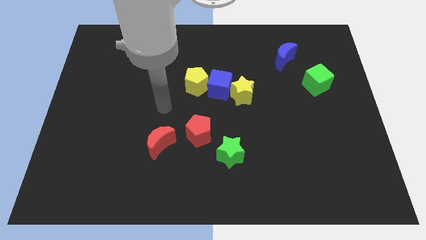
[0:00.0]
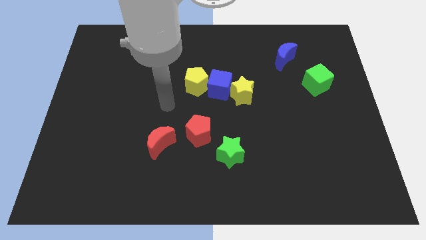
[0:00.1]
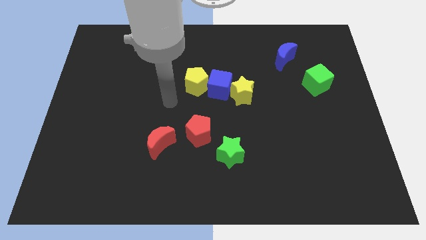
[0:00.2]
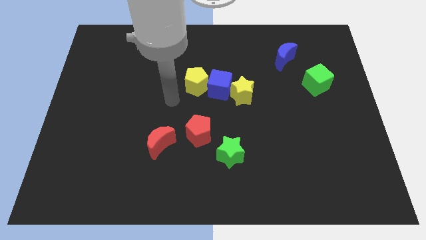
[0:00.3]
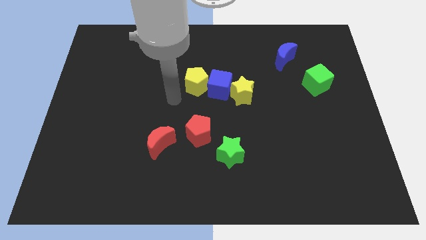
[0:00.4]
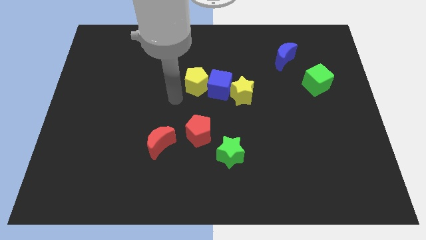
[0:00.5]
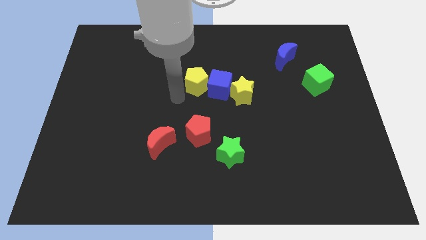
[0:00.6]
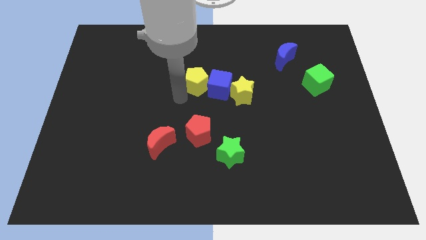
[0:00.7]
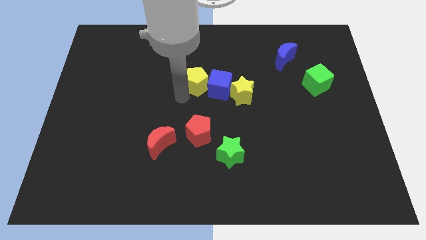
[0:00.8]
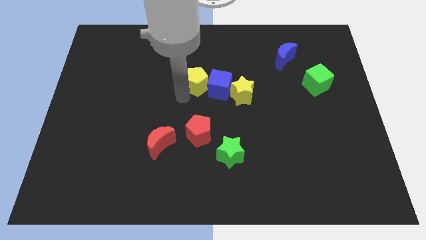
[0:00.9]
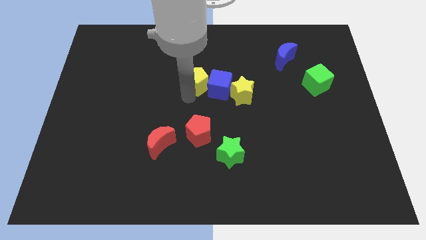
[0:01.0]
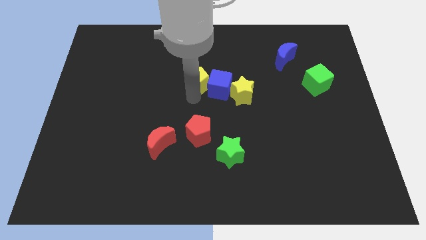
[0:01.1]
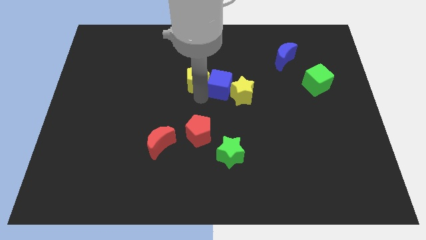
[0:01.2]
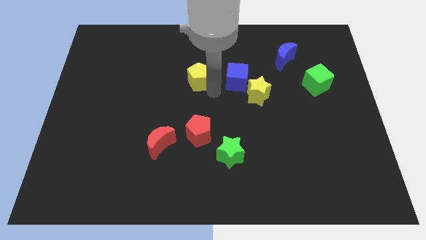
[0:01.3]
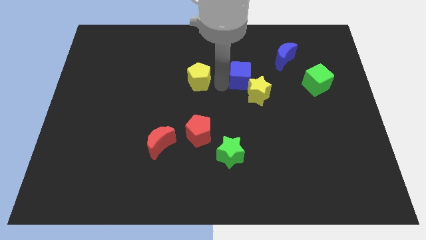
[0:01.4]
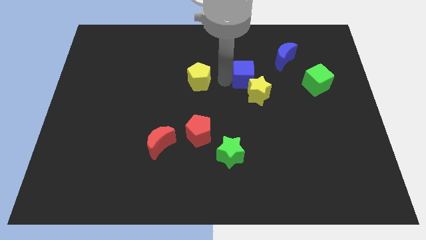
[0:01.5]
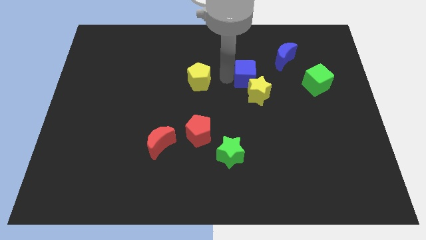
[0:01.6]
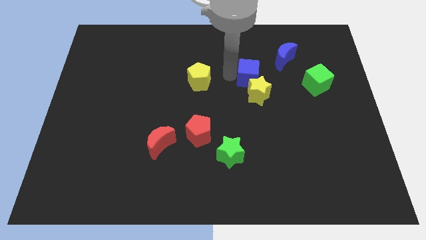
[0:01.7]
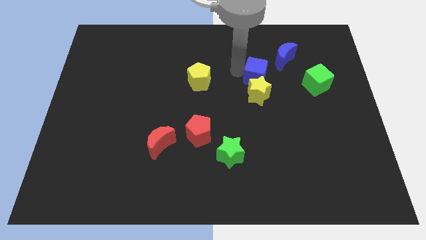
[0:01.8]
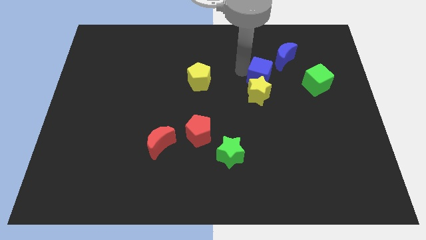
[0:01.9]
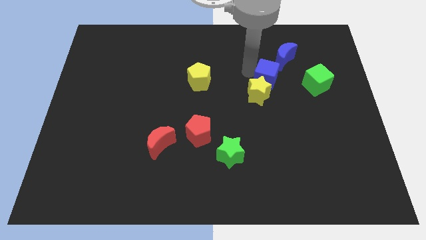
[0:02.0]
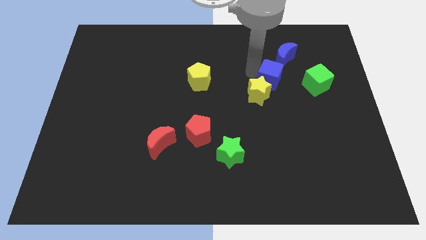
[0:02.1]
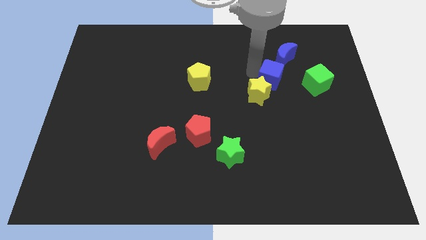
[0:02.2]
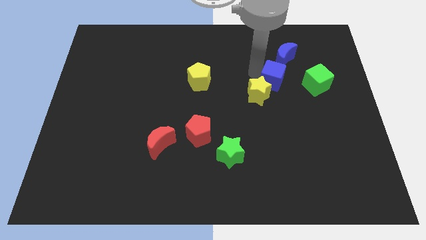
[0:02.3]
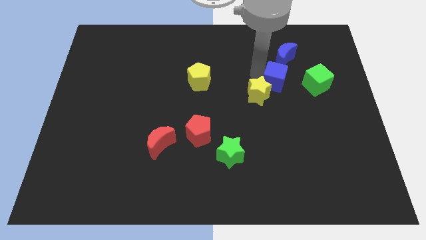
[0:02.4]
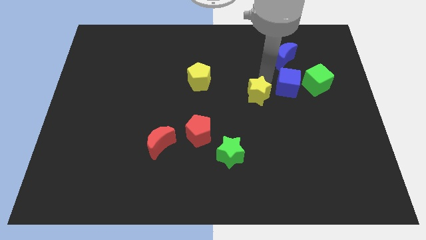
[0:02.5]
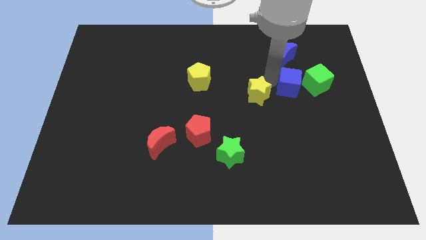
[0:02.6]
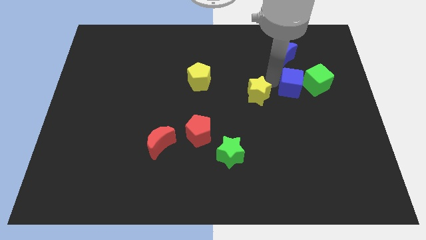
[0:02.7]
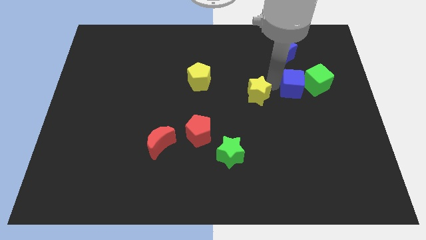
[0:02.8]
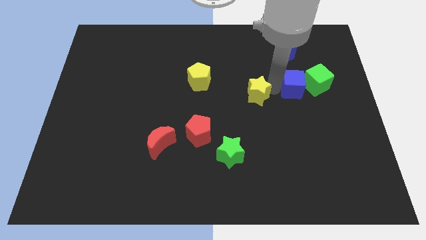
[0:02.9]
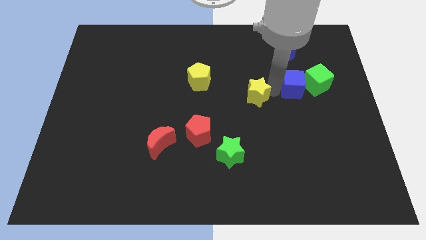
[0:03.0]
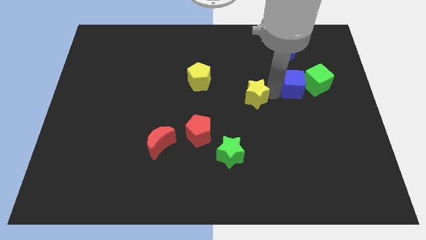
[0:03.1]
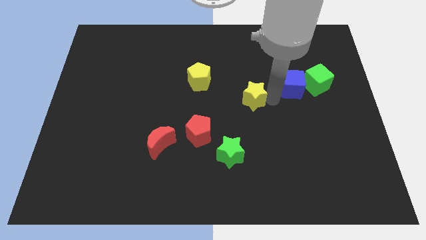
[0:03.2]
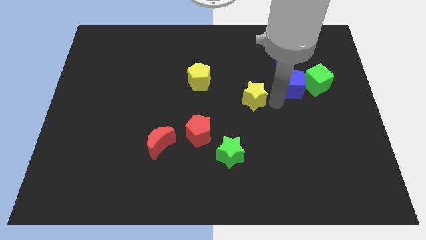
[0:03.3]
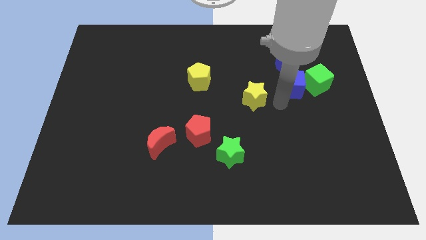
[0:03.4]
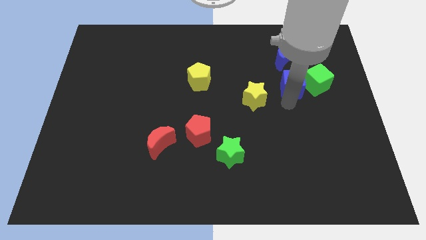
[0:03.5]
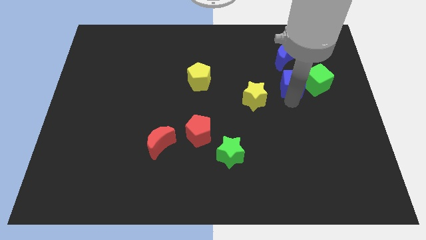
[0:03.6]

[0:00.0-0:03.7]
move the blue cube to the bottom left side of the green cube

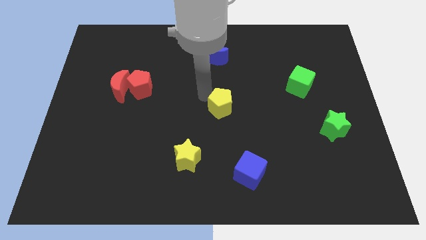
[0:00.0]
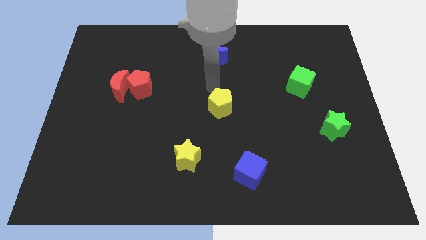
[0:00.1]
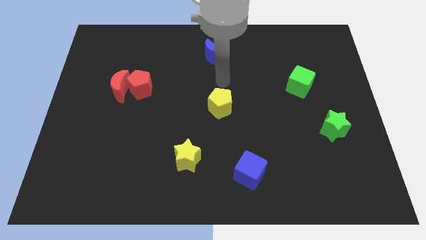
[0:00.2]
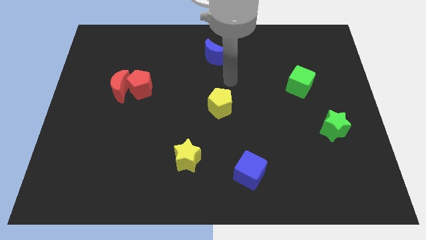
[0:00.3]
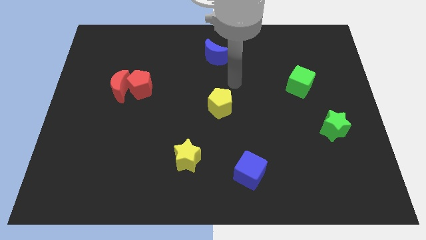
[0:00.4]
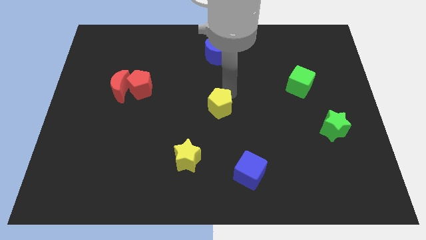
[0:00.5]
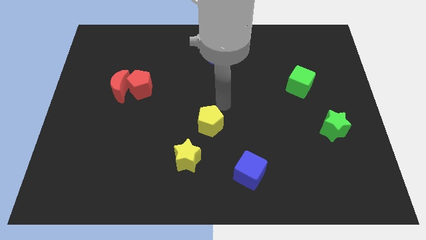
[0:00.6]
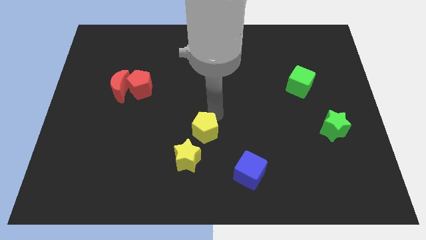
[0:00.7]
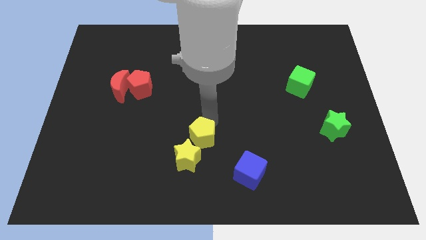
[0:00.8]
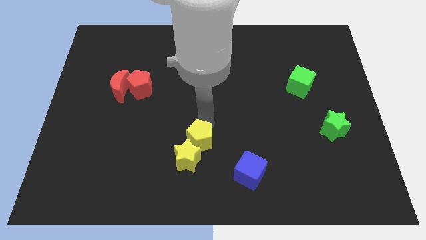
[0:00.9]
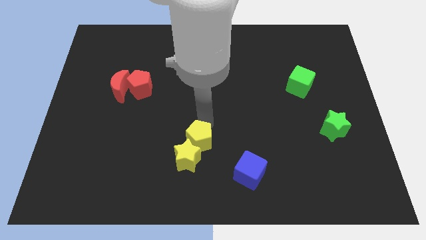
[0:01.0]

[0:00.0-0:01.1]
push the yellow pentagon towards the top right side of the yellow star

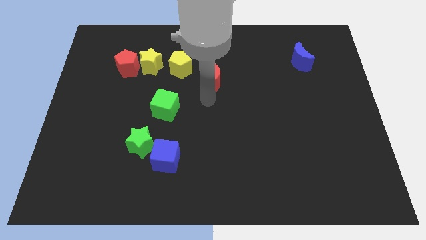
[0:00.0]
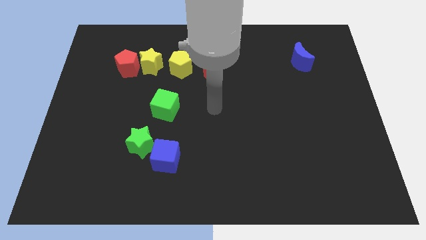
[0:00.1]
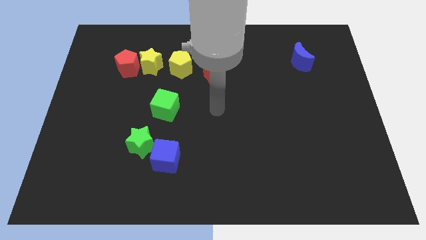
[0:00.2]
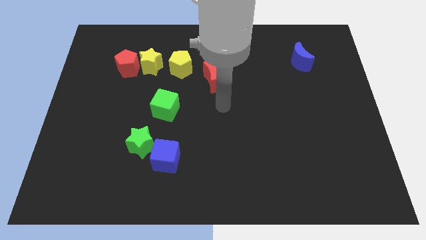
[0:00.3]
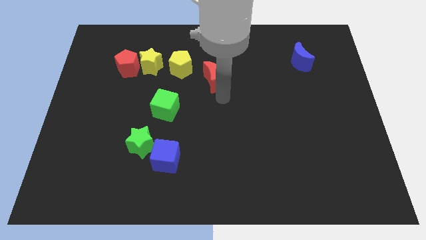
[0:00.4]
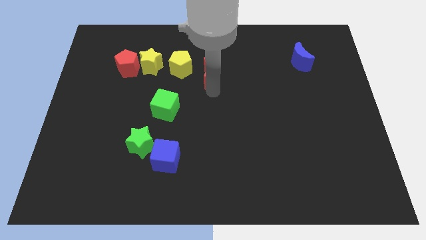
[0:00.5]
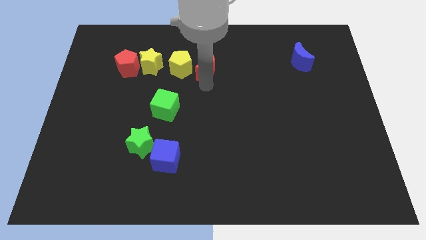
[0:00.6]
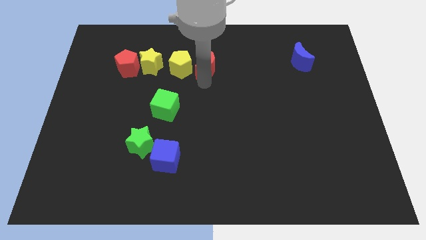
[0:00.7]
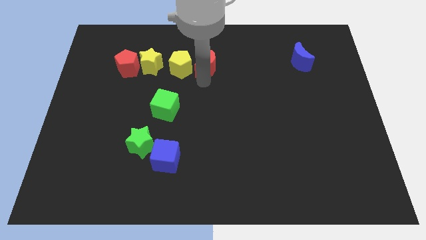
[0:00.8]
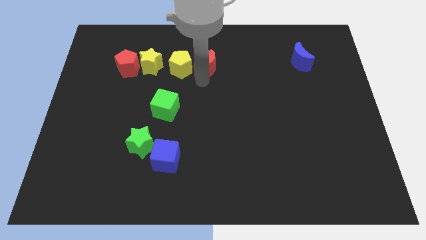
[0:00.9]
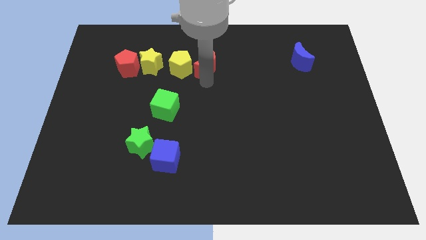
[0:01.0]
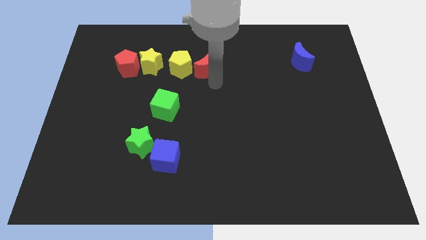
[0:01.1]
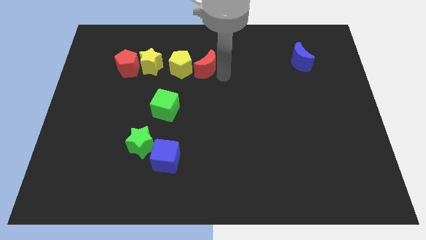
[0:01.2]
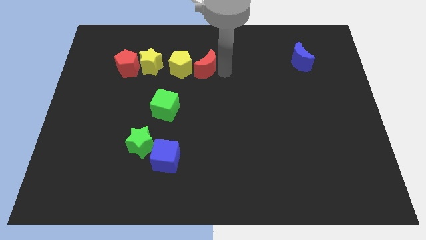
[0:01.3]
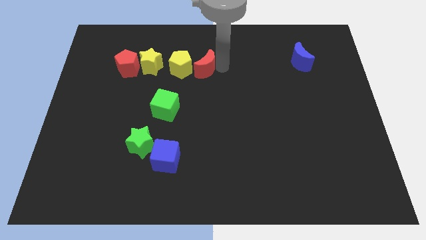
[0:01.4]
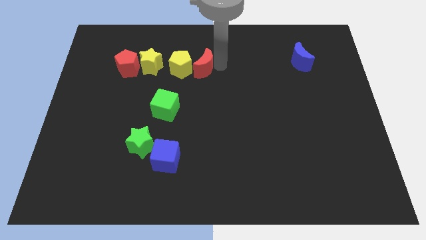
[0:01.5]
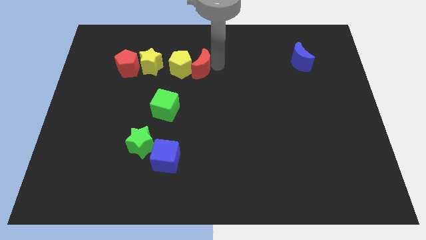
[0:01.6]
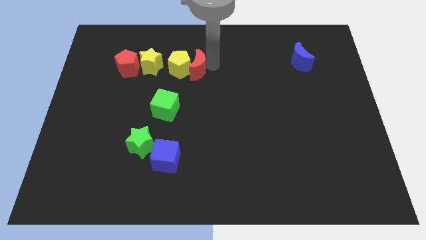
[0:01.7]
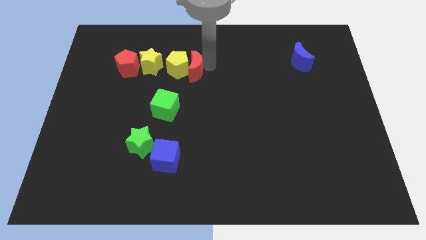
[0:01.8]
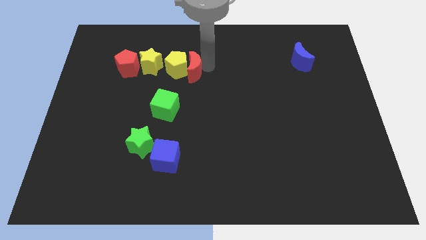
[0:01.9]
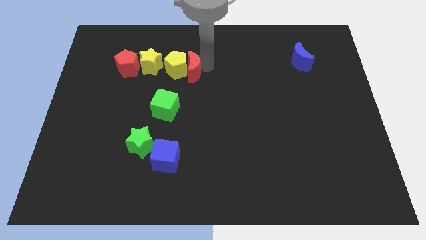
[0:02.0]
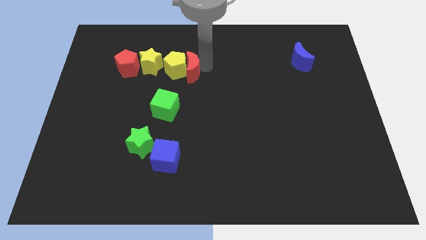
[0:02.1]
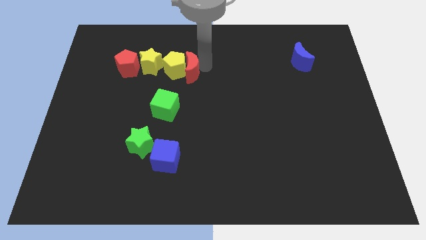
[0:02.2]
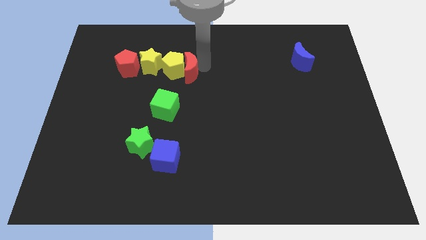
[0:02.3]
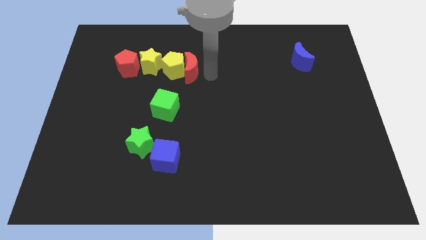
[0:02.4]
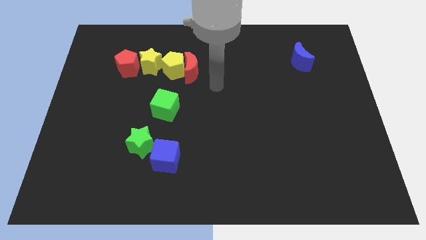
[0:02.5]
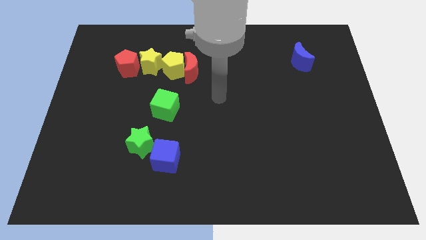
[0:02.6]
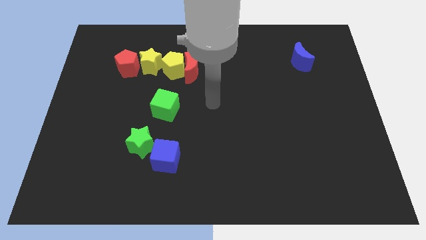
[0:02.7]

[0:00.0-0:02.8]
push the red moon into the right of the yellow pentagon

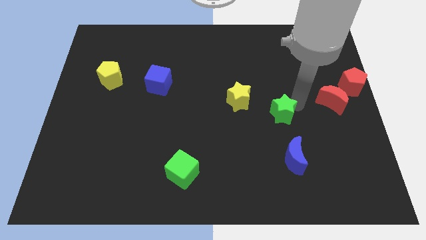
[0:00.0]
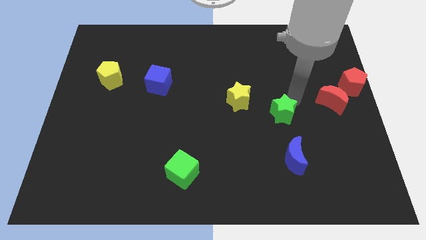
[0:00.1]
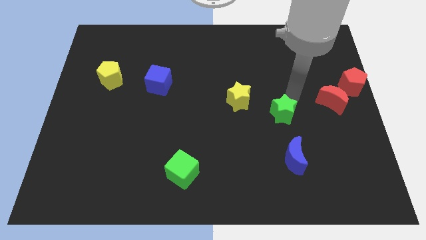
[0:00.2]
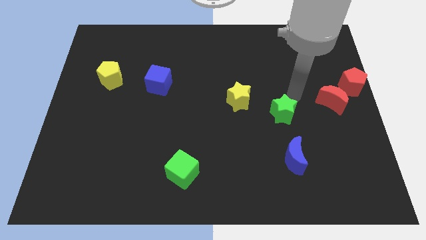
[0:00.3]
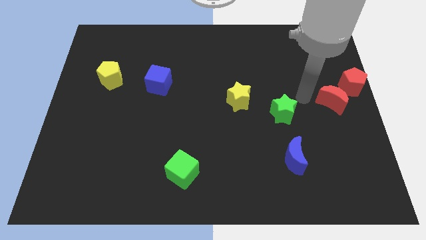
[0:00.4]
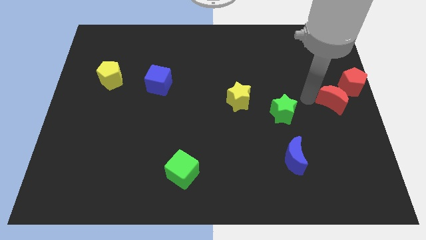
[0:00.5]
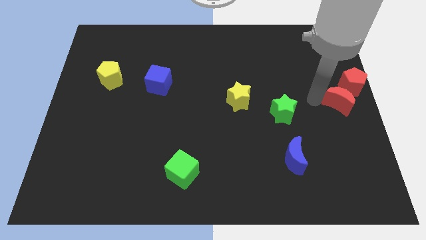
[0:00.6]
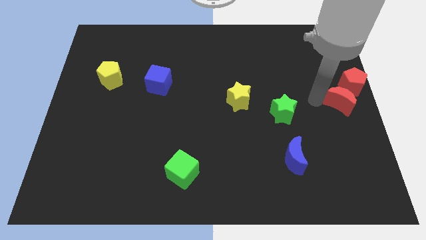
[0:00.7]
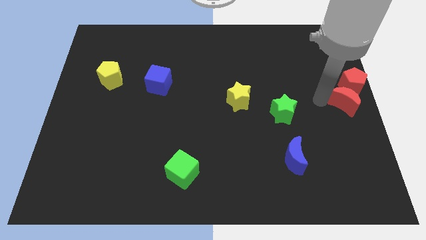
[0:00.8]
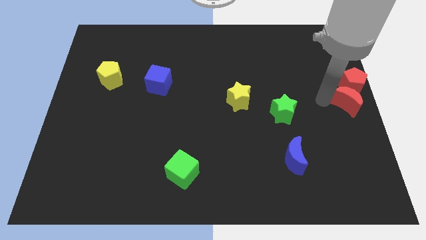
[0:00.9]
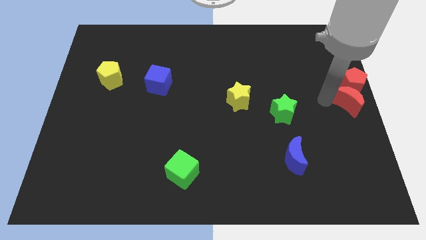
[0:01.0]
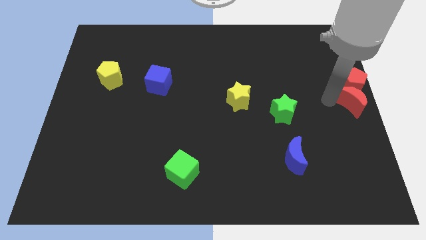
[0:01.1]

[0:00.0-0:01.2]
move red moon into red pentagon
